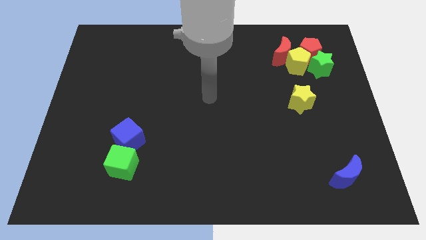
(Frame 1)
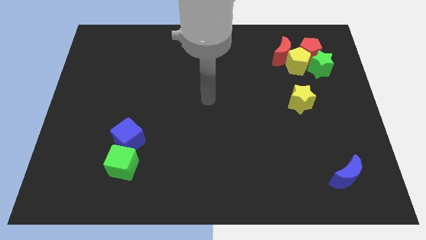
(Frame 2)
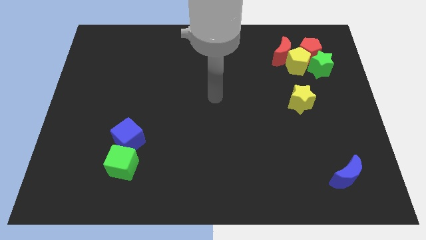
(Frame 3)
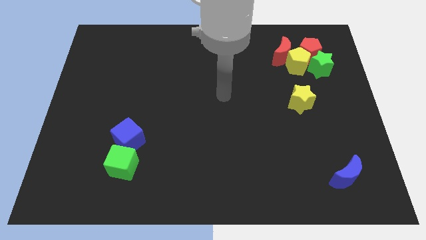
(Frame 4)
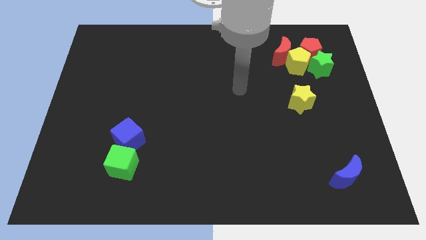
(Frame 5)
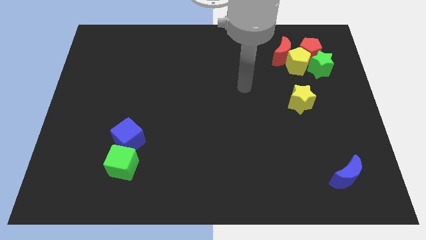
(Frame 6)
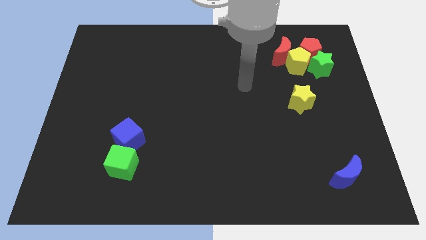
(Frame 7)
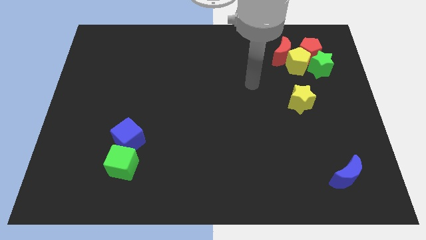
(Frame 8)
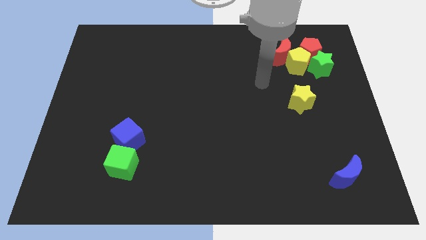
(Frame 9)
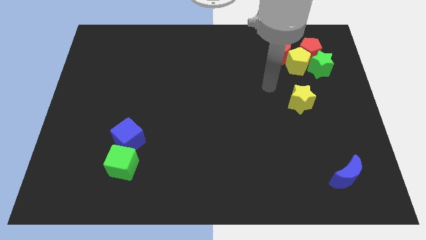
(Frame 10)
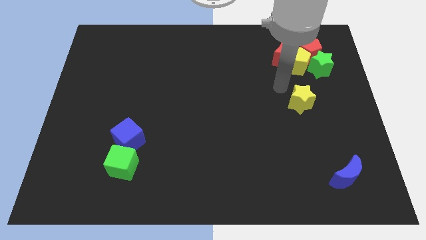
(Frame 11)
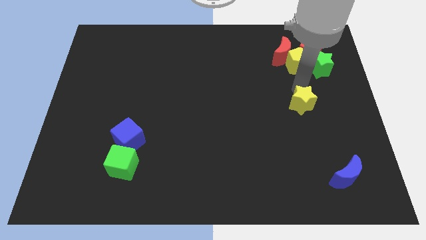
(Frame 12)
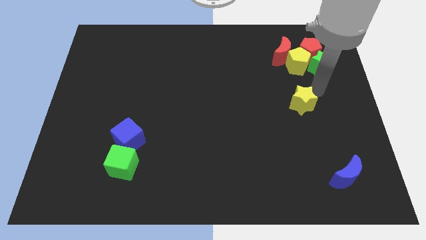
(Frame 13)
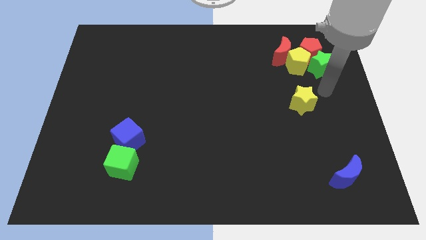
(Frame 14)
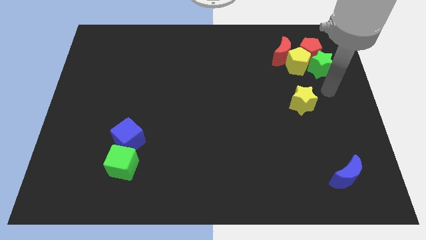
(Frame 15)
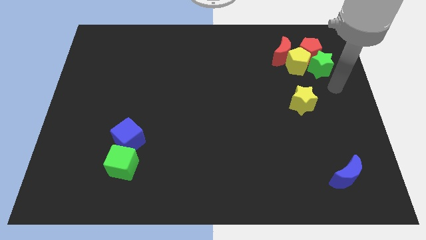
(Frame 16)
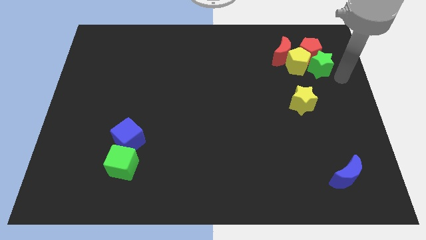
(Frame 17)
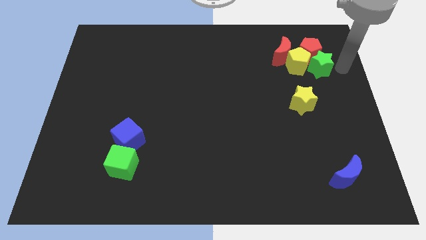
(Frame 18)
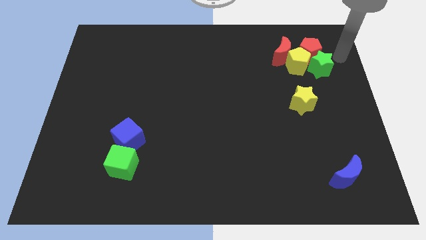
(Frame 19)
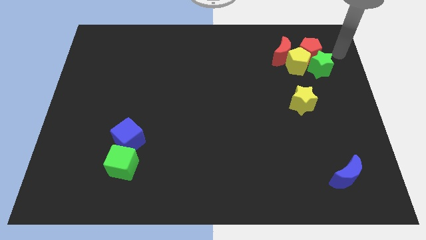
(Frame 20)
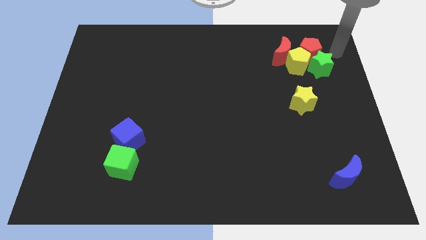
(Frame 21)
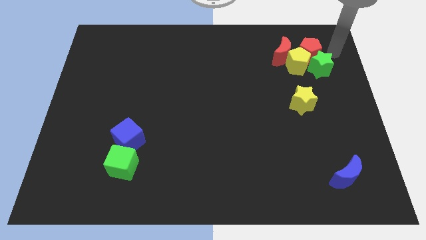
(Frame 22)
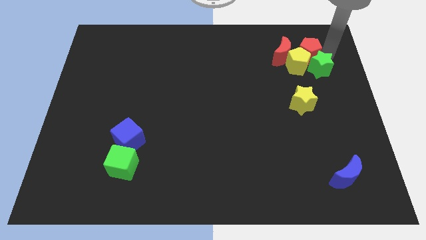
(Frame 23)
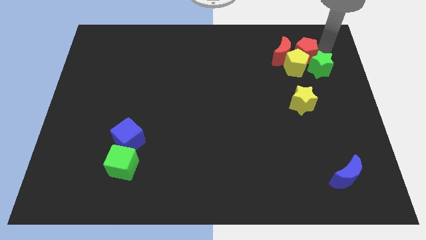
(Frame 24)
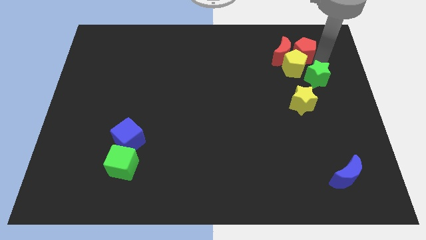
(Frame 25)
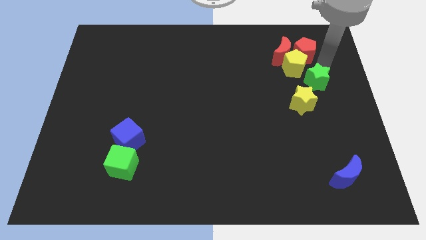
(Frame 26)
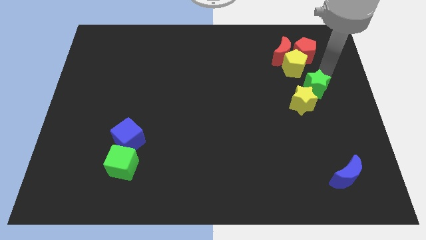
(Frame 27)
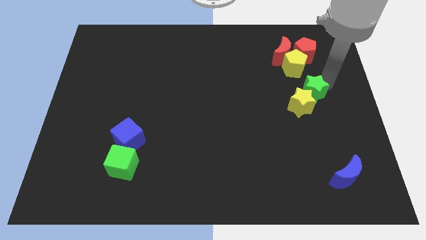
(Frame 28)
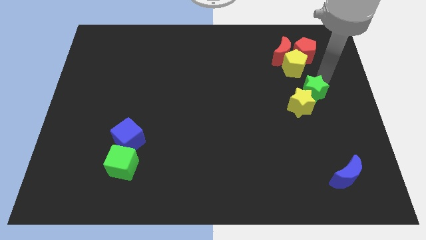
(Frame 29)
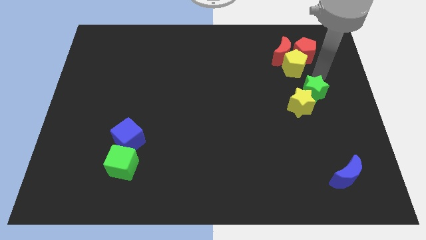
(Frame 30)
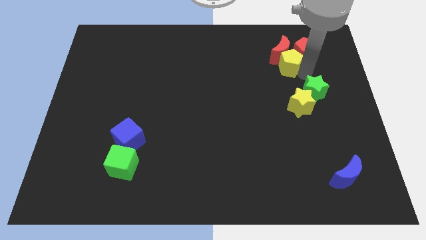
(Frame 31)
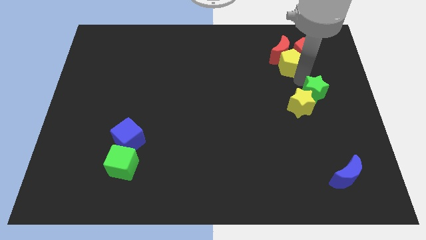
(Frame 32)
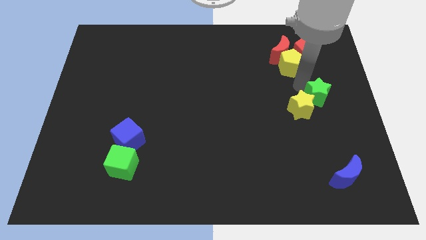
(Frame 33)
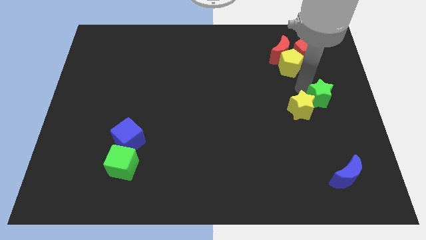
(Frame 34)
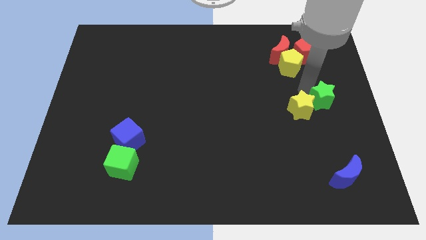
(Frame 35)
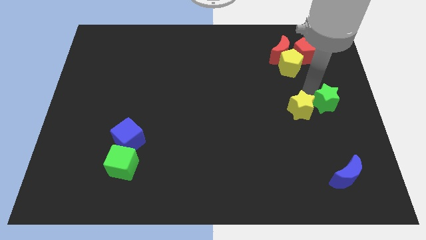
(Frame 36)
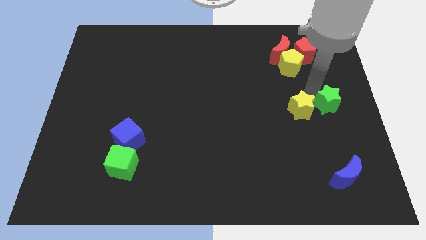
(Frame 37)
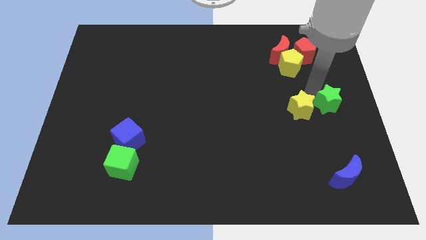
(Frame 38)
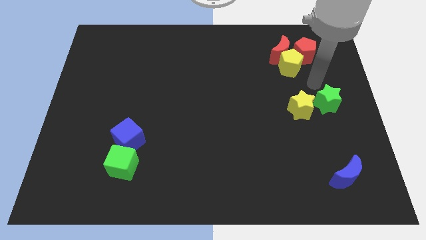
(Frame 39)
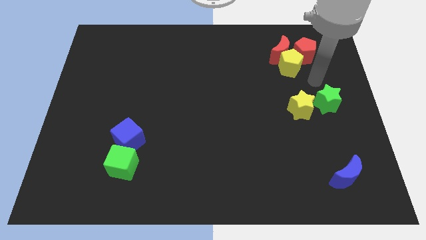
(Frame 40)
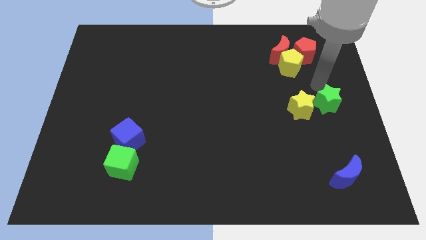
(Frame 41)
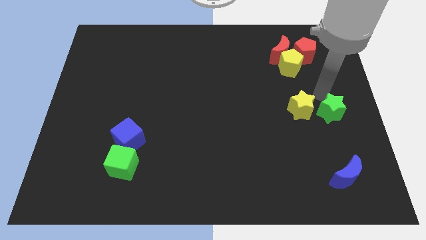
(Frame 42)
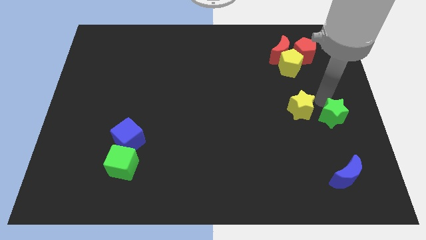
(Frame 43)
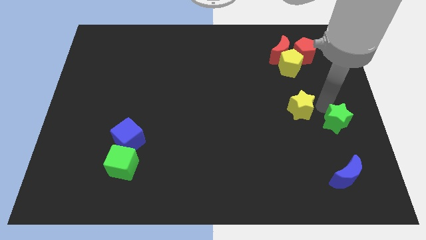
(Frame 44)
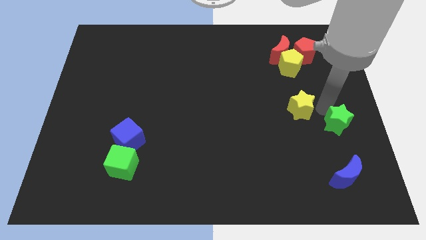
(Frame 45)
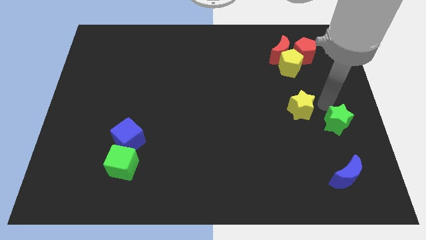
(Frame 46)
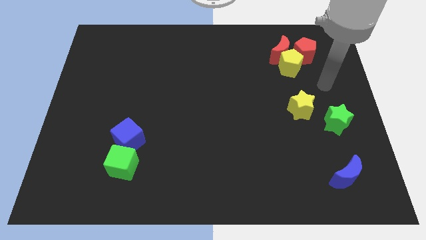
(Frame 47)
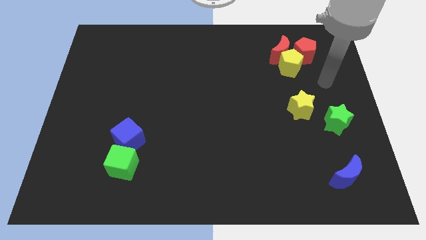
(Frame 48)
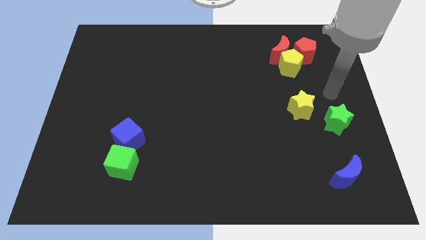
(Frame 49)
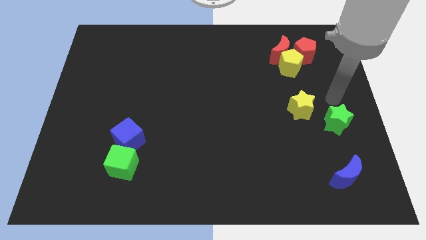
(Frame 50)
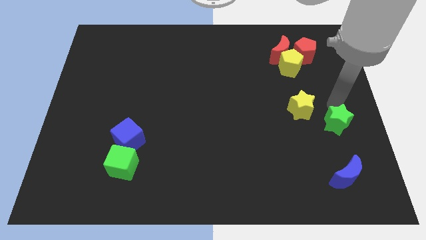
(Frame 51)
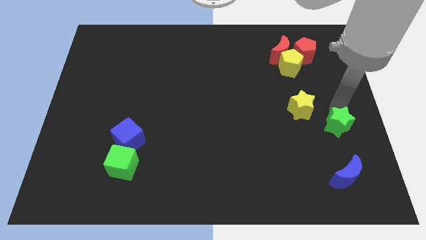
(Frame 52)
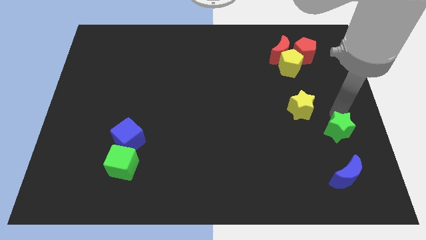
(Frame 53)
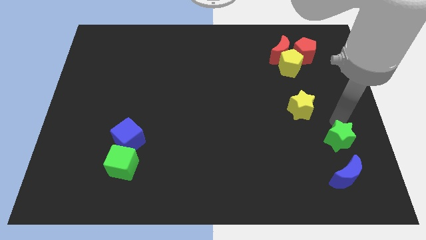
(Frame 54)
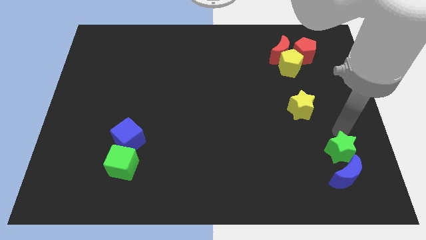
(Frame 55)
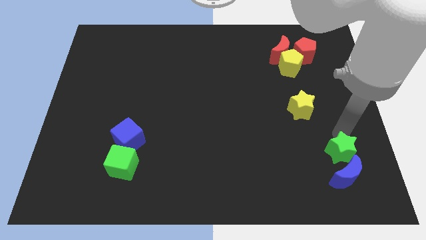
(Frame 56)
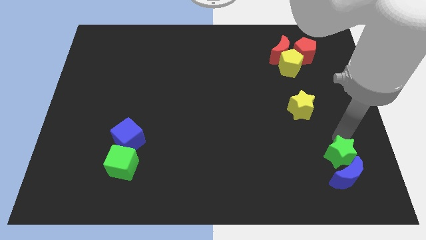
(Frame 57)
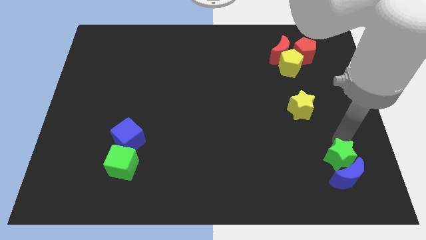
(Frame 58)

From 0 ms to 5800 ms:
slide the green star towards the blue moon

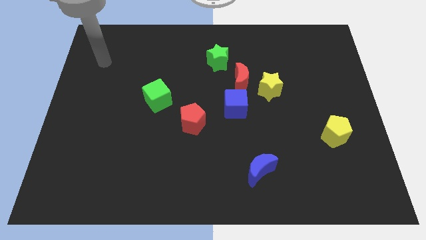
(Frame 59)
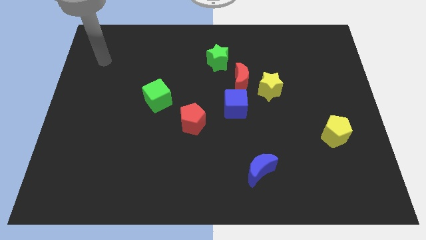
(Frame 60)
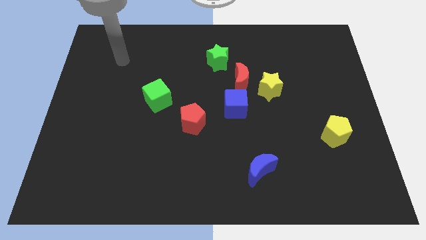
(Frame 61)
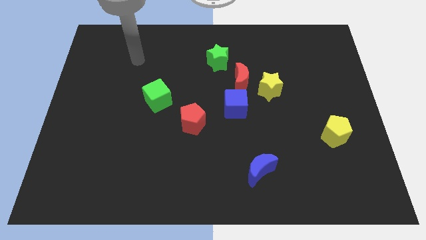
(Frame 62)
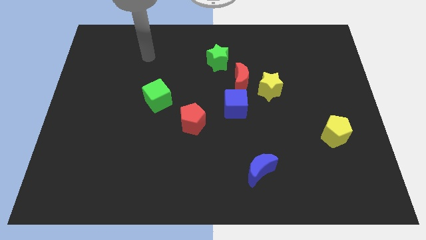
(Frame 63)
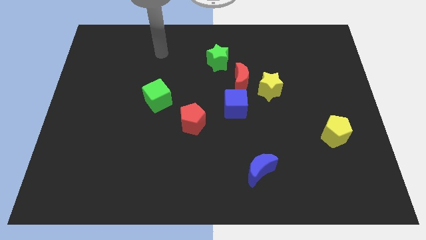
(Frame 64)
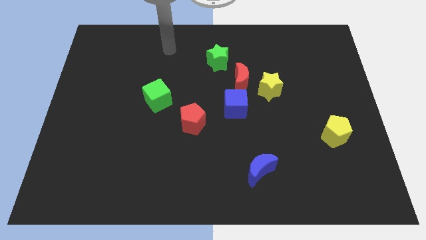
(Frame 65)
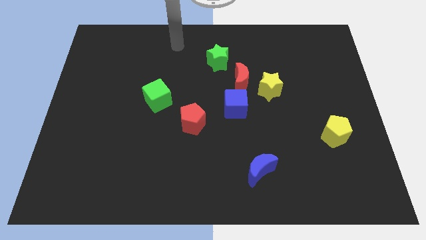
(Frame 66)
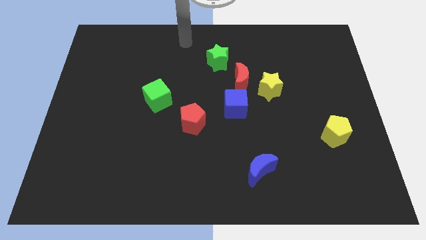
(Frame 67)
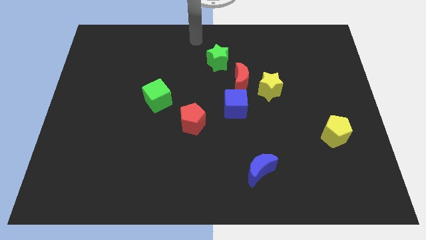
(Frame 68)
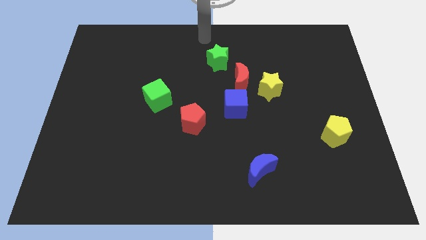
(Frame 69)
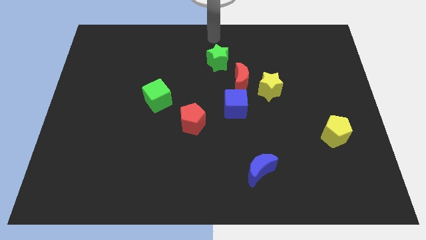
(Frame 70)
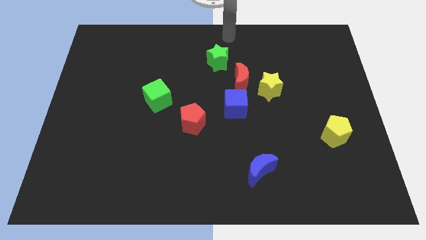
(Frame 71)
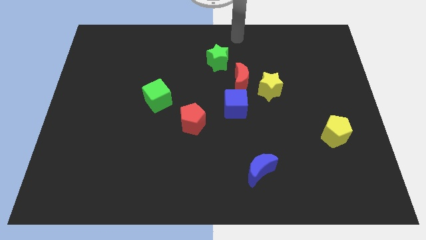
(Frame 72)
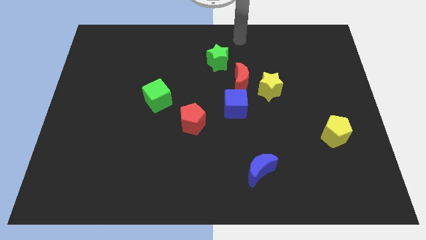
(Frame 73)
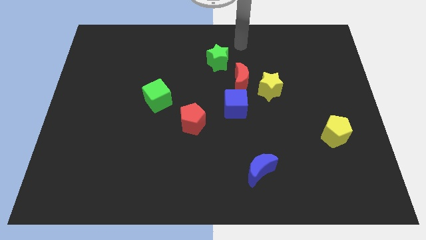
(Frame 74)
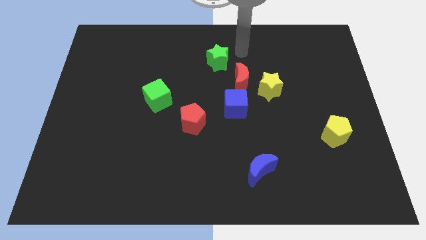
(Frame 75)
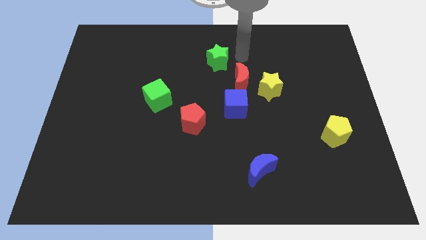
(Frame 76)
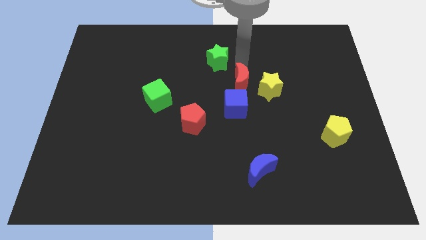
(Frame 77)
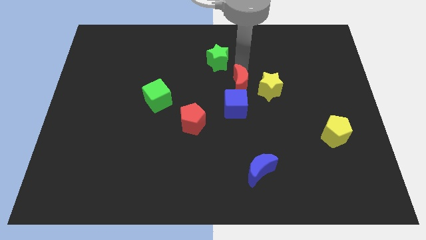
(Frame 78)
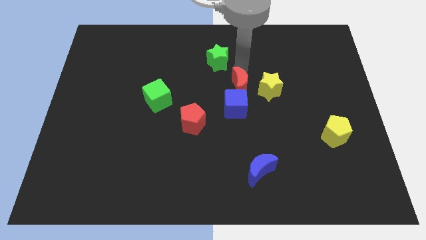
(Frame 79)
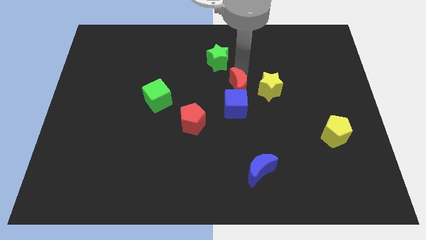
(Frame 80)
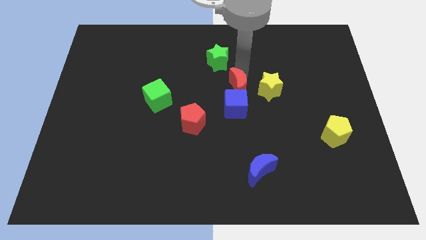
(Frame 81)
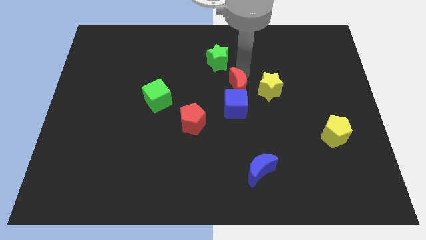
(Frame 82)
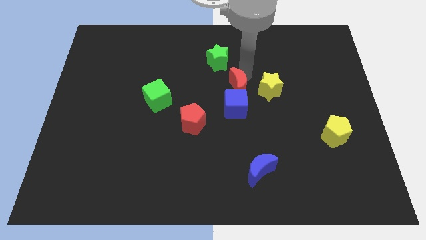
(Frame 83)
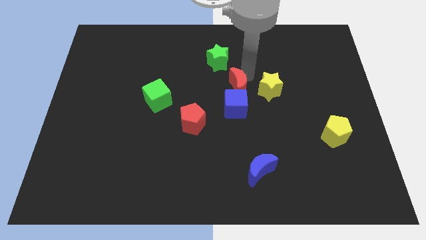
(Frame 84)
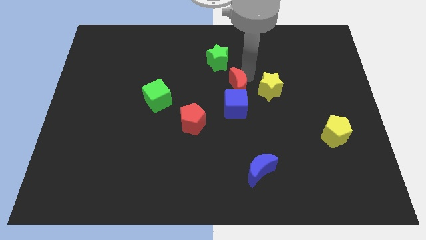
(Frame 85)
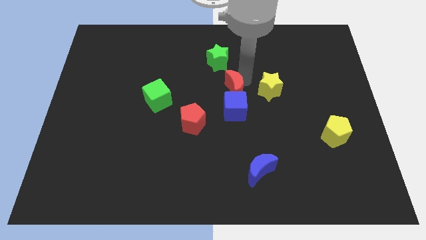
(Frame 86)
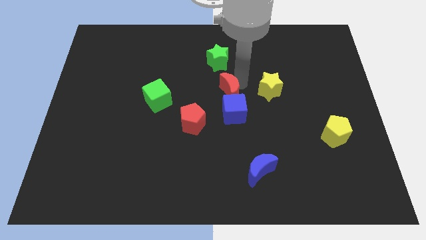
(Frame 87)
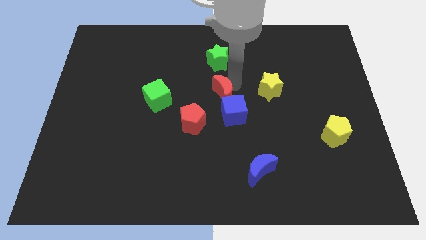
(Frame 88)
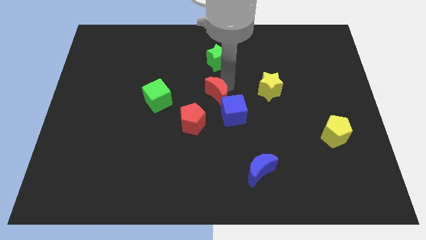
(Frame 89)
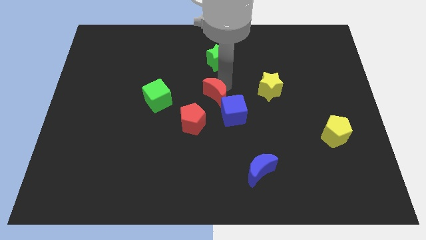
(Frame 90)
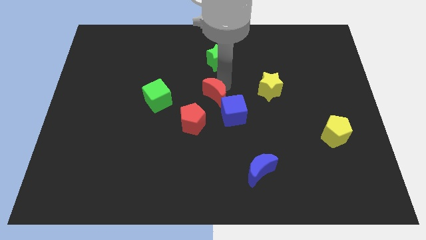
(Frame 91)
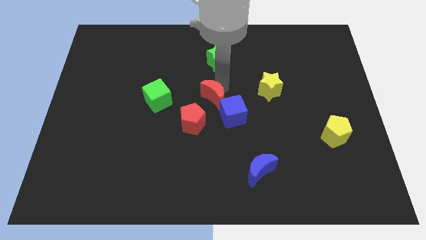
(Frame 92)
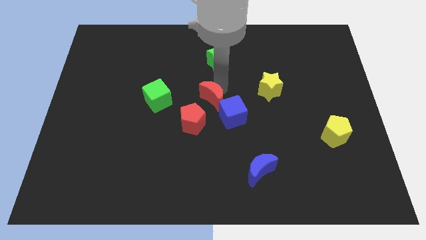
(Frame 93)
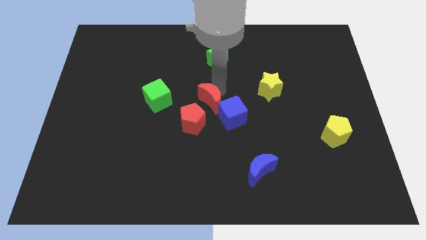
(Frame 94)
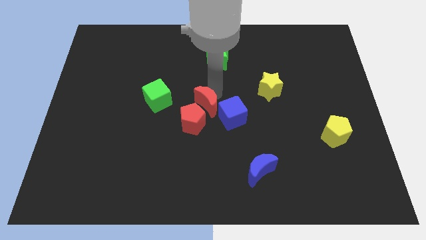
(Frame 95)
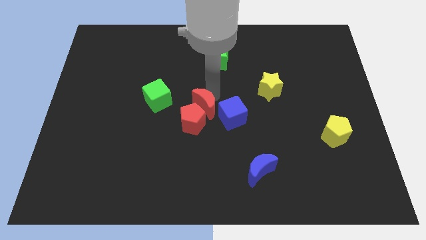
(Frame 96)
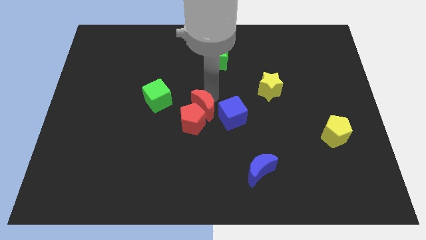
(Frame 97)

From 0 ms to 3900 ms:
move the red moon to the red pentagon
